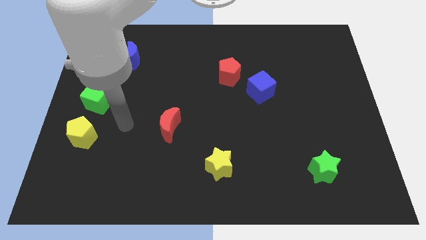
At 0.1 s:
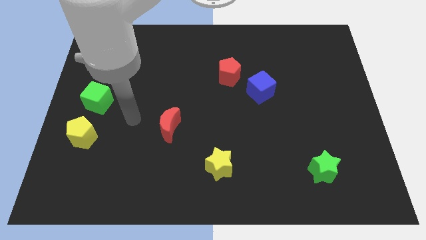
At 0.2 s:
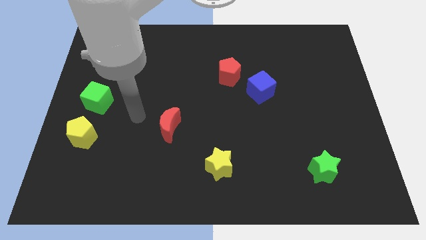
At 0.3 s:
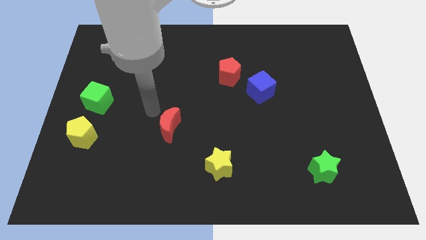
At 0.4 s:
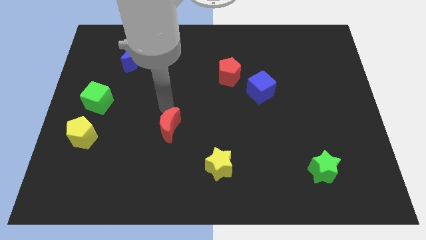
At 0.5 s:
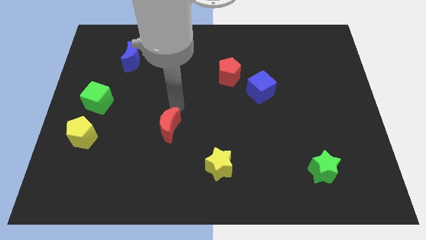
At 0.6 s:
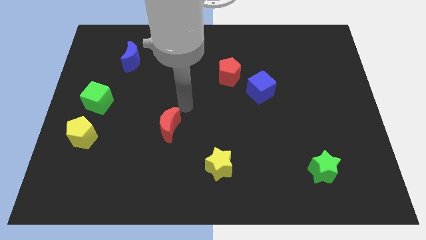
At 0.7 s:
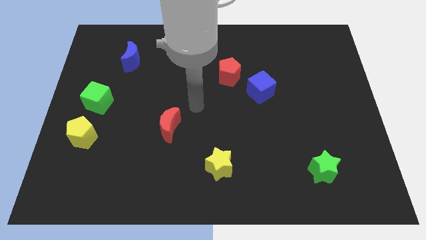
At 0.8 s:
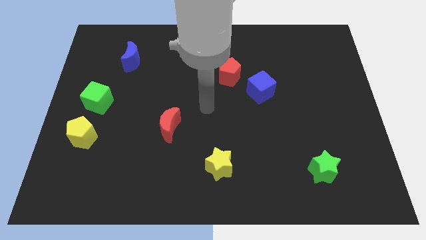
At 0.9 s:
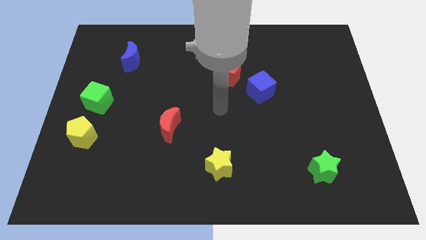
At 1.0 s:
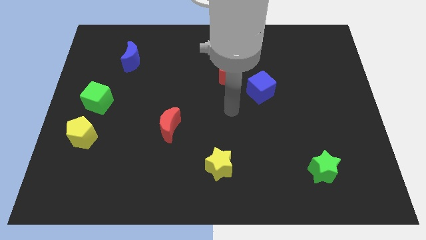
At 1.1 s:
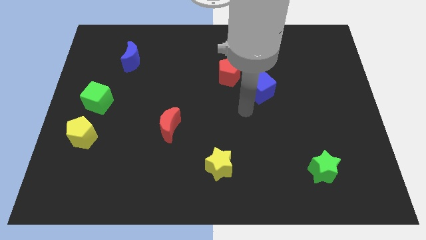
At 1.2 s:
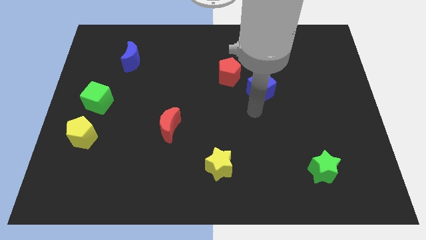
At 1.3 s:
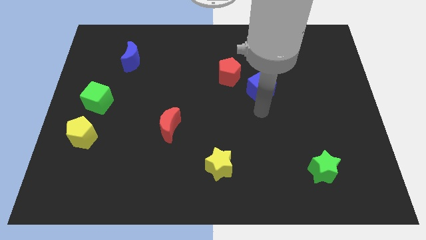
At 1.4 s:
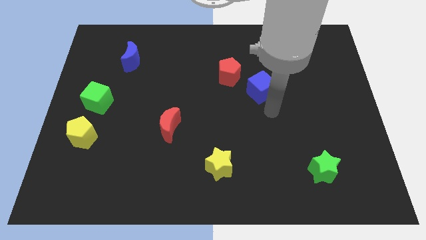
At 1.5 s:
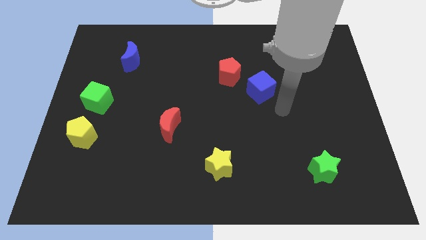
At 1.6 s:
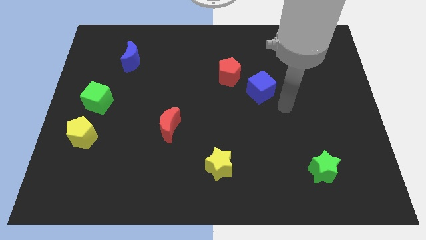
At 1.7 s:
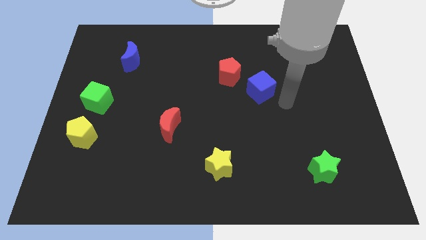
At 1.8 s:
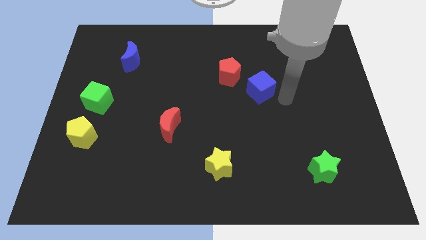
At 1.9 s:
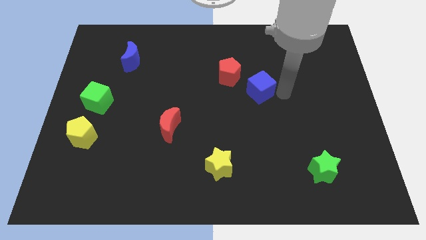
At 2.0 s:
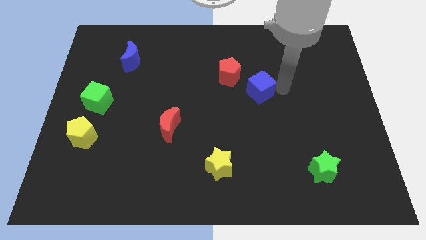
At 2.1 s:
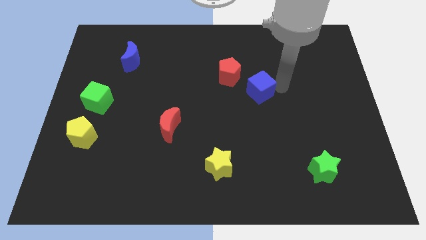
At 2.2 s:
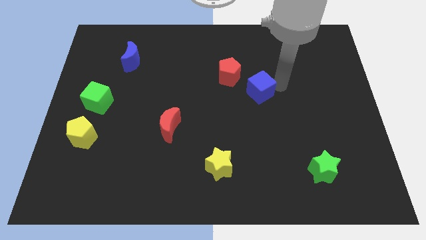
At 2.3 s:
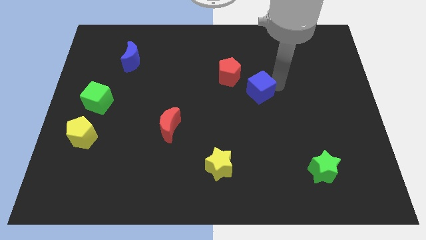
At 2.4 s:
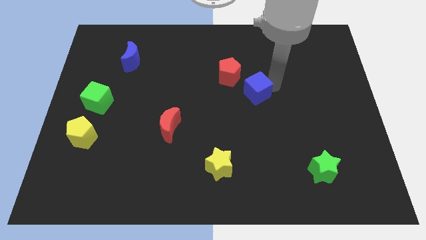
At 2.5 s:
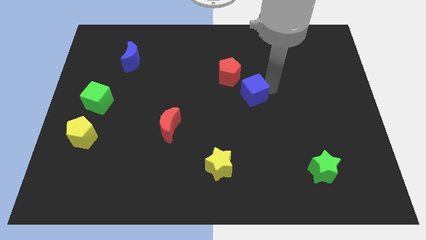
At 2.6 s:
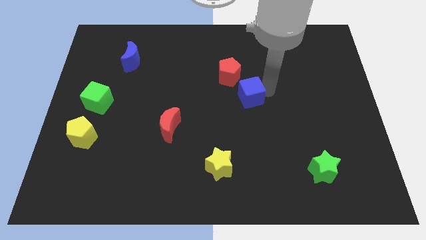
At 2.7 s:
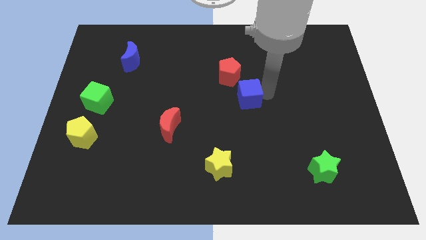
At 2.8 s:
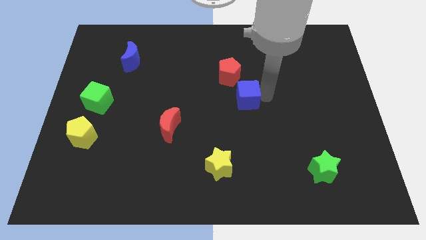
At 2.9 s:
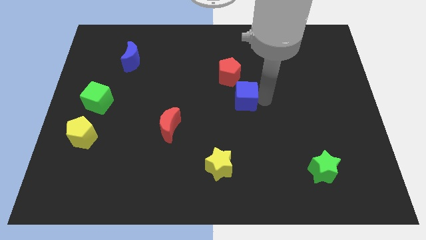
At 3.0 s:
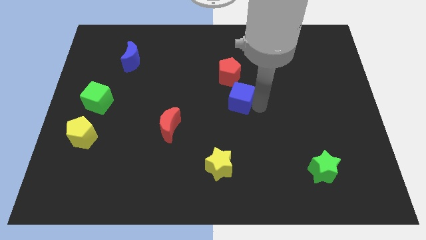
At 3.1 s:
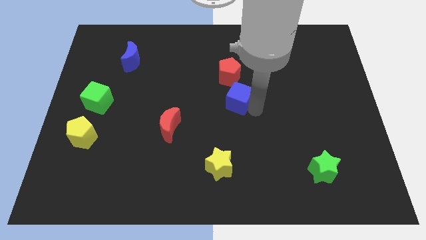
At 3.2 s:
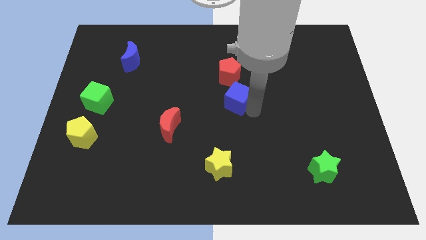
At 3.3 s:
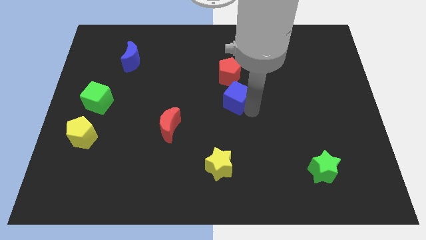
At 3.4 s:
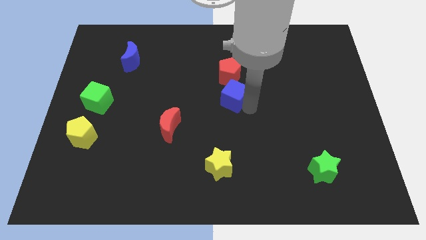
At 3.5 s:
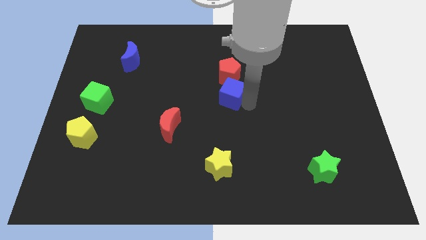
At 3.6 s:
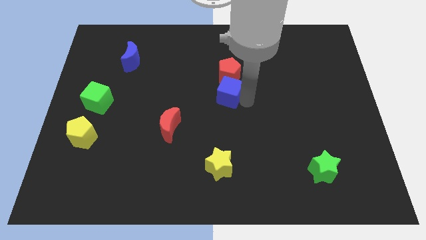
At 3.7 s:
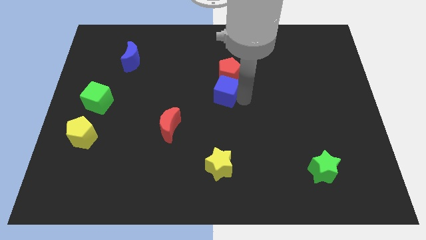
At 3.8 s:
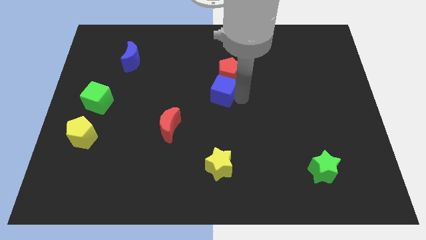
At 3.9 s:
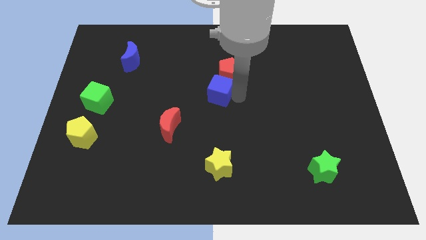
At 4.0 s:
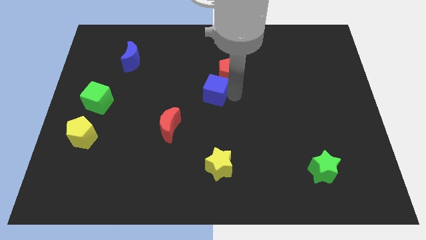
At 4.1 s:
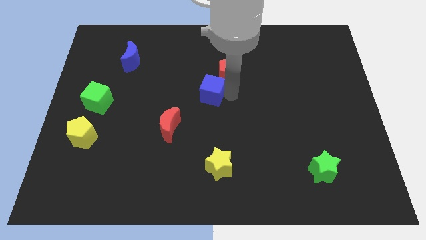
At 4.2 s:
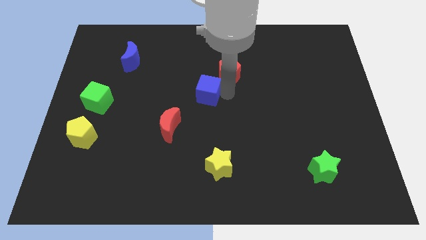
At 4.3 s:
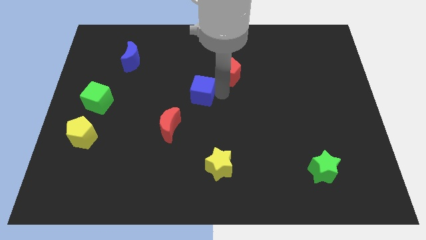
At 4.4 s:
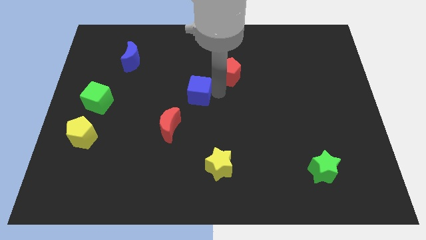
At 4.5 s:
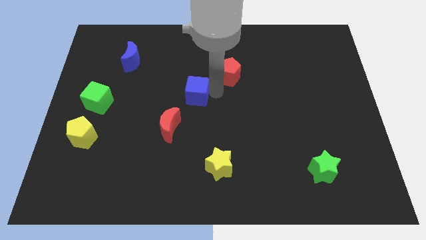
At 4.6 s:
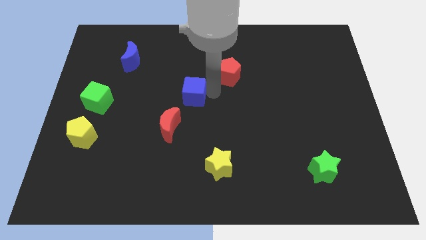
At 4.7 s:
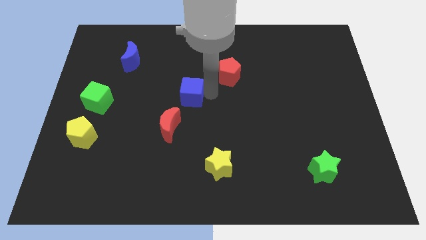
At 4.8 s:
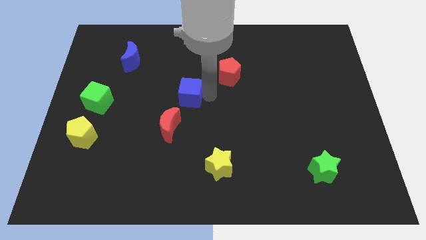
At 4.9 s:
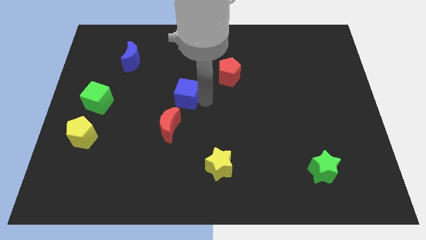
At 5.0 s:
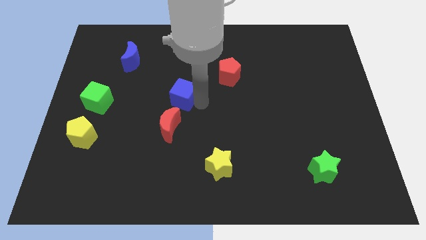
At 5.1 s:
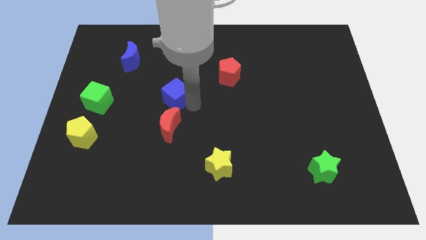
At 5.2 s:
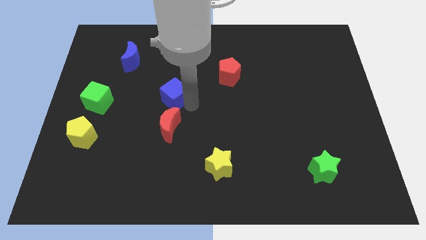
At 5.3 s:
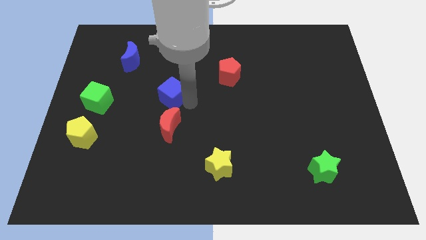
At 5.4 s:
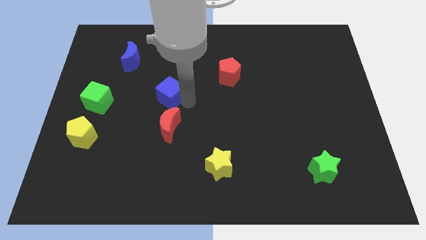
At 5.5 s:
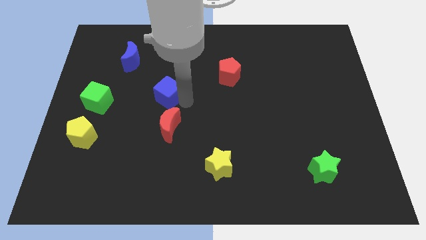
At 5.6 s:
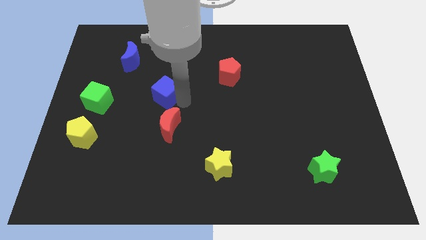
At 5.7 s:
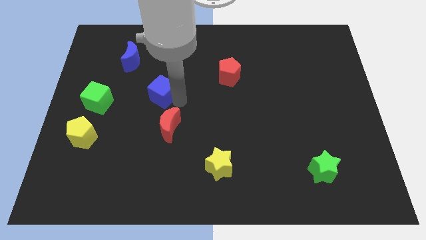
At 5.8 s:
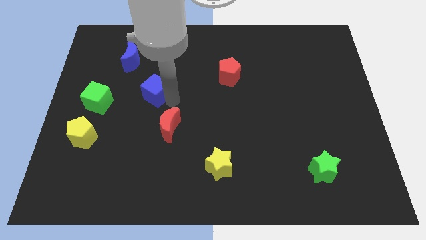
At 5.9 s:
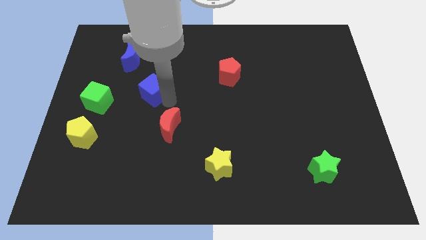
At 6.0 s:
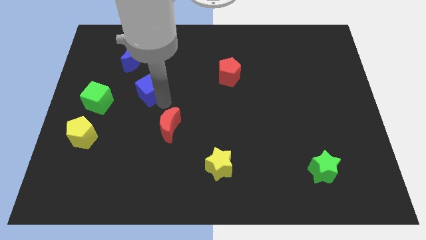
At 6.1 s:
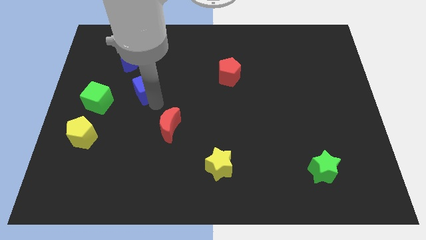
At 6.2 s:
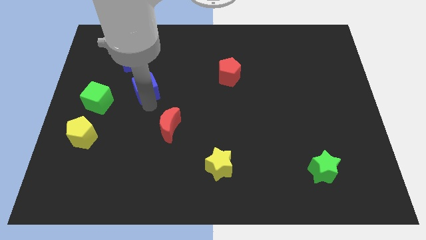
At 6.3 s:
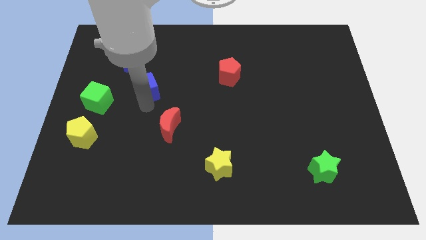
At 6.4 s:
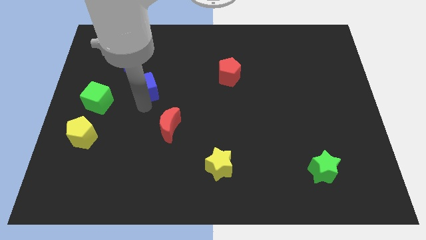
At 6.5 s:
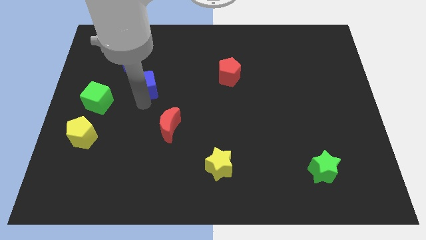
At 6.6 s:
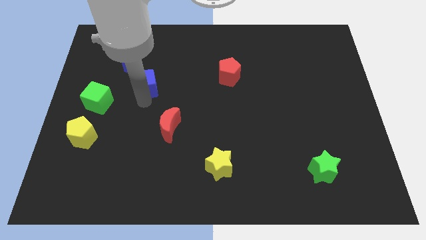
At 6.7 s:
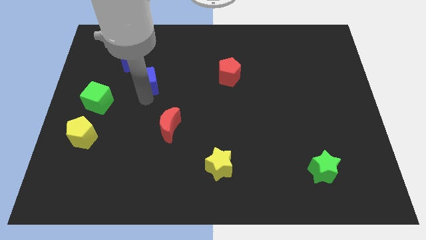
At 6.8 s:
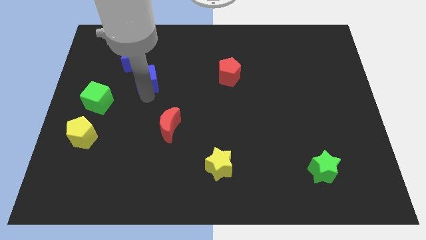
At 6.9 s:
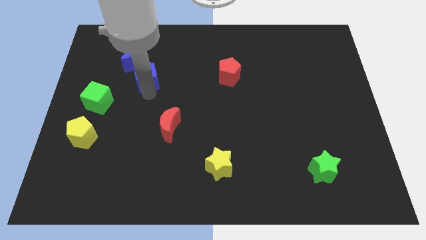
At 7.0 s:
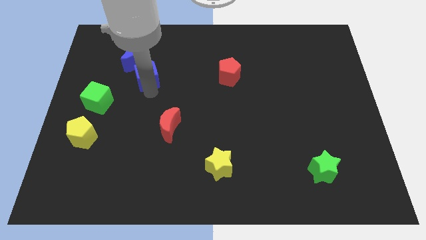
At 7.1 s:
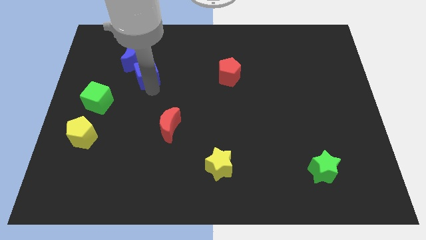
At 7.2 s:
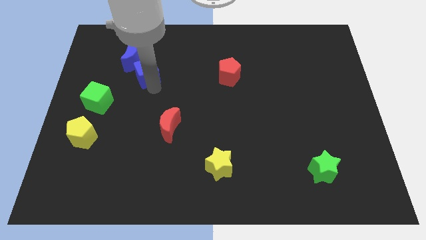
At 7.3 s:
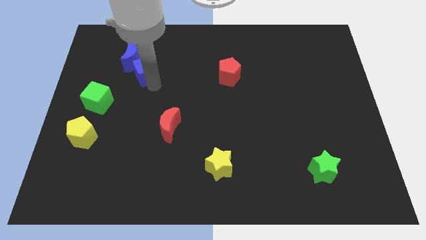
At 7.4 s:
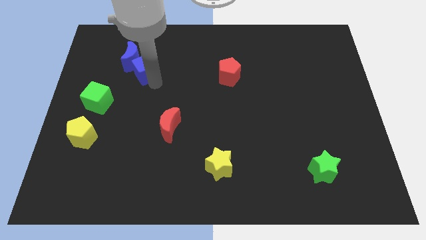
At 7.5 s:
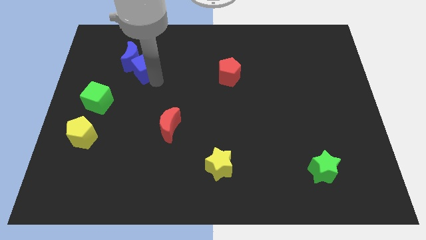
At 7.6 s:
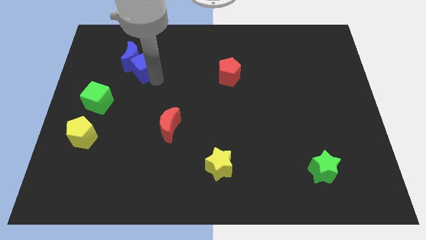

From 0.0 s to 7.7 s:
slide the blue cube close to the blue moon

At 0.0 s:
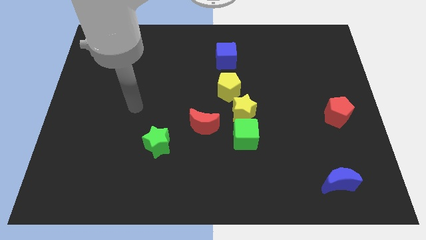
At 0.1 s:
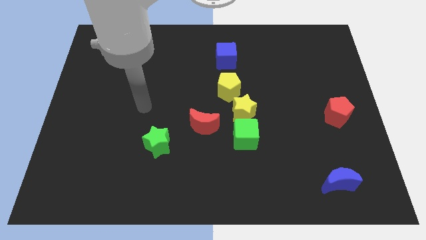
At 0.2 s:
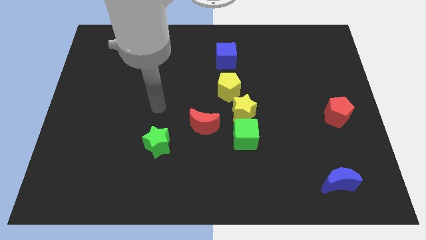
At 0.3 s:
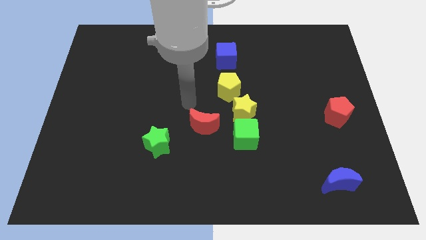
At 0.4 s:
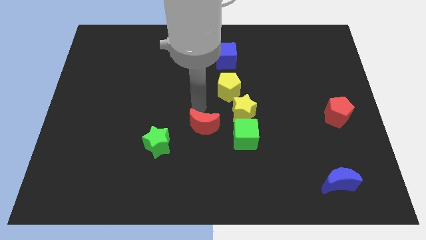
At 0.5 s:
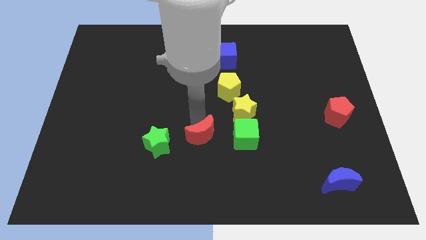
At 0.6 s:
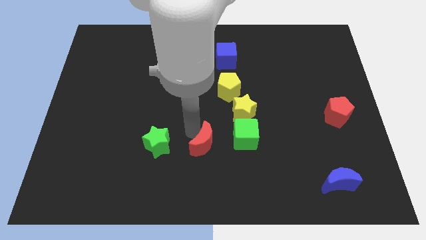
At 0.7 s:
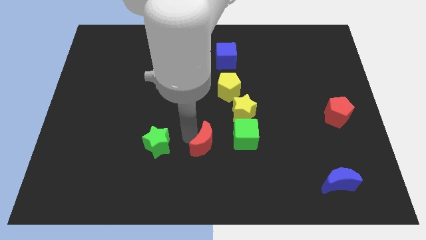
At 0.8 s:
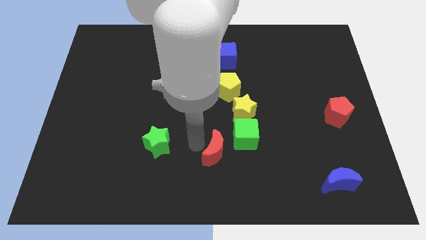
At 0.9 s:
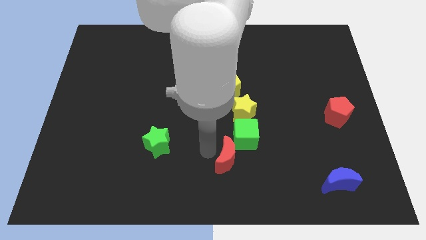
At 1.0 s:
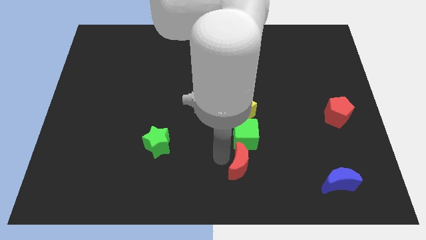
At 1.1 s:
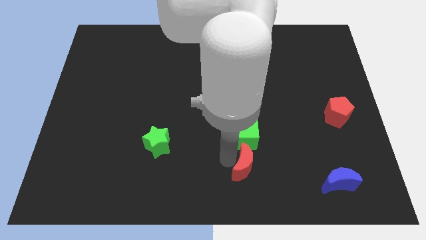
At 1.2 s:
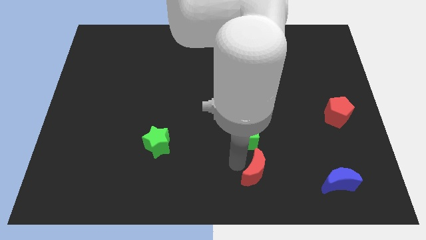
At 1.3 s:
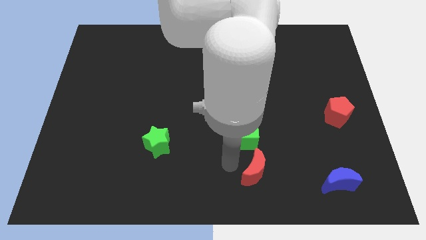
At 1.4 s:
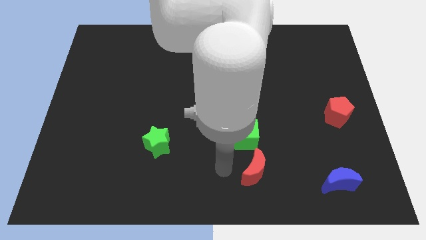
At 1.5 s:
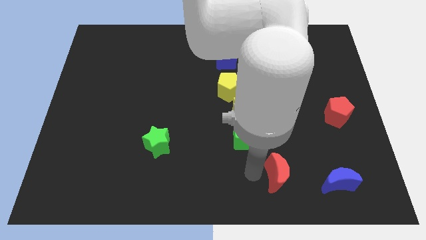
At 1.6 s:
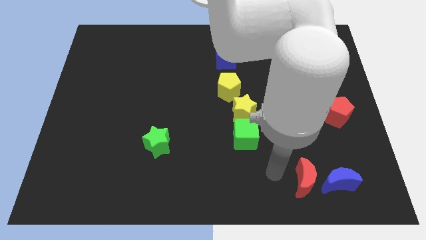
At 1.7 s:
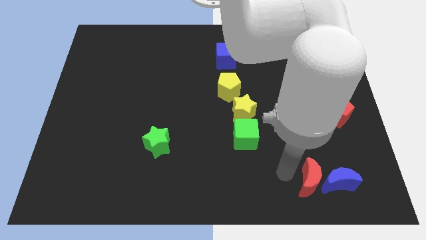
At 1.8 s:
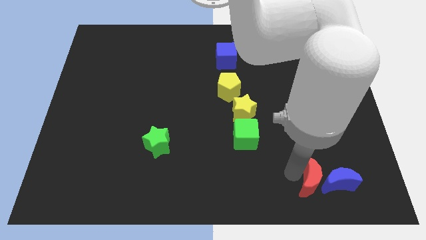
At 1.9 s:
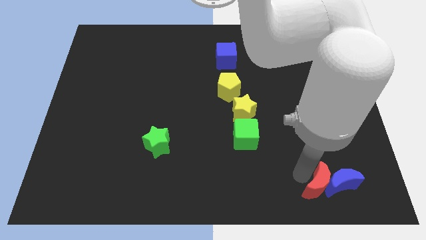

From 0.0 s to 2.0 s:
move the red moon towards the blue moon
